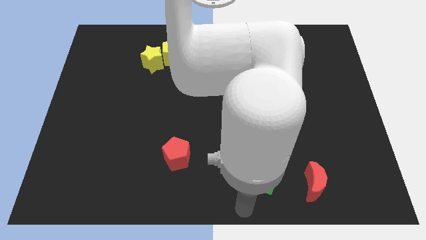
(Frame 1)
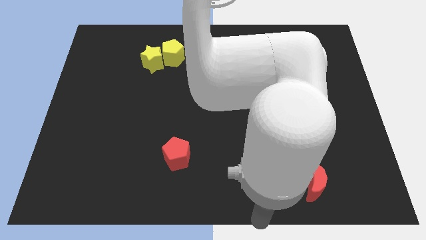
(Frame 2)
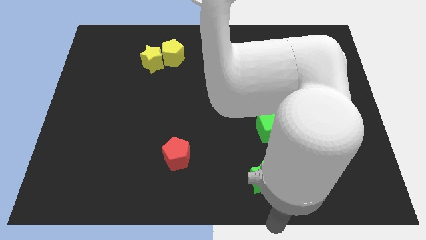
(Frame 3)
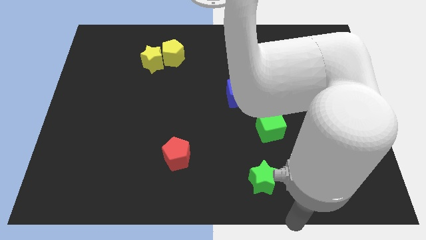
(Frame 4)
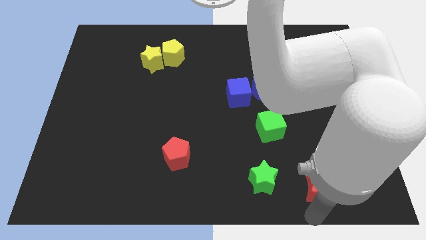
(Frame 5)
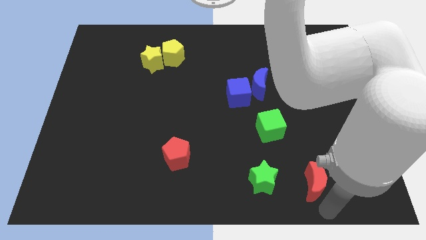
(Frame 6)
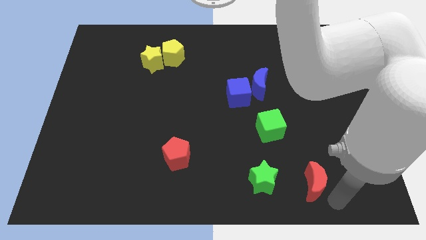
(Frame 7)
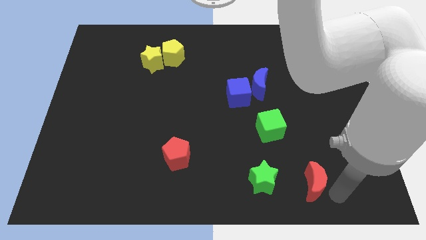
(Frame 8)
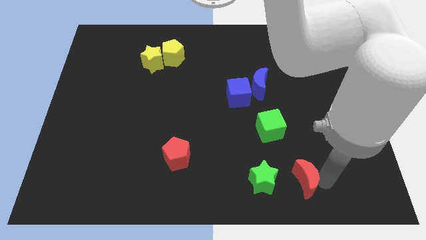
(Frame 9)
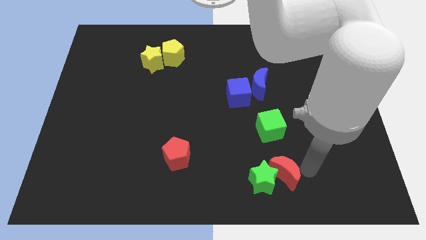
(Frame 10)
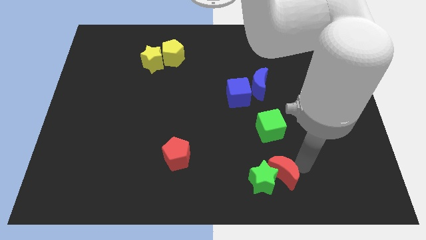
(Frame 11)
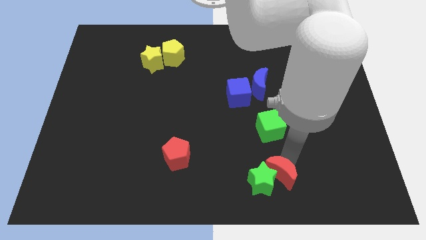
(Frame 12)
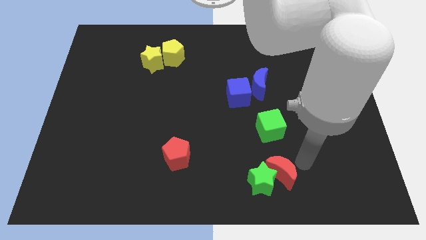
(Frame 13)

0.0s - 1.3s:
push the red crescent into the green star

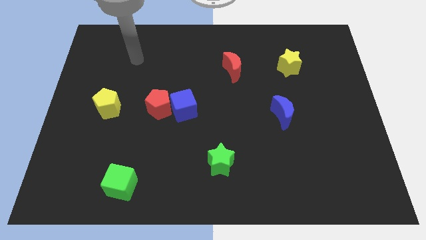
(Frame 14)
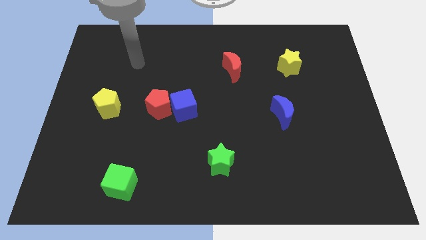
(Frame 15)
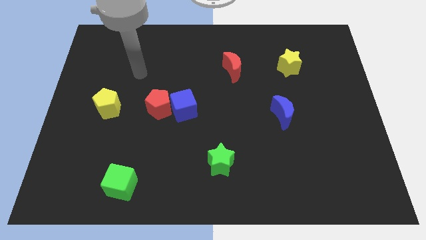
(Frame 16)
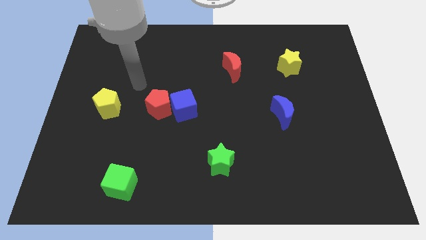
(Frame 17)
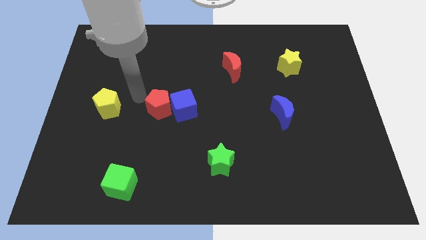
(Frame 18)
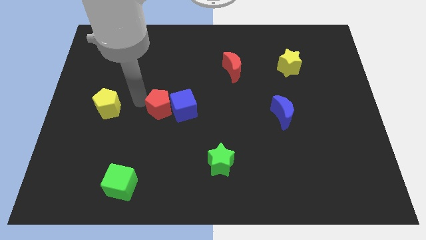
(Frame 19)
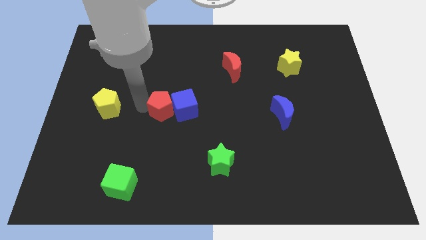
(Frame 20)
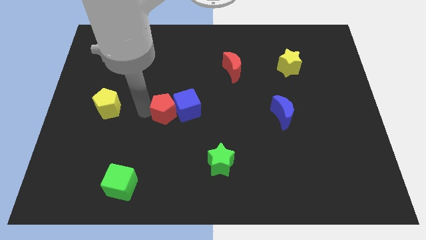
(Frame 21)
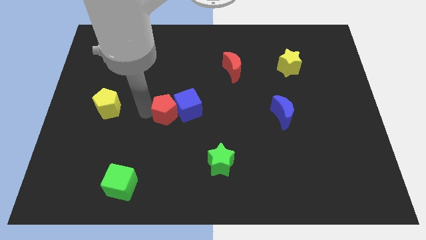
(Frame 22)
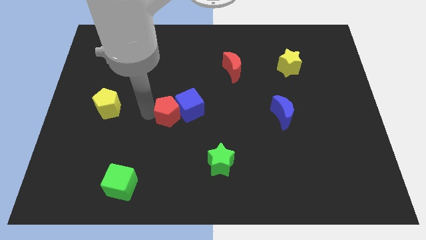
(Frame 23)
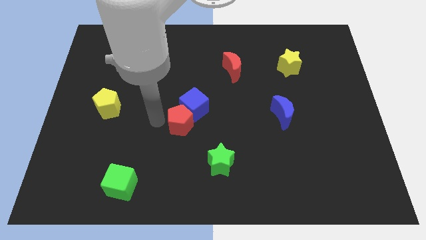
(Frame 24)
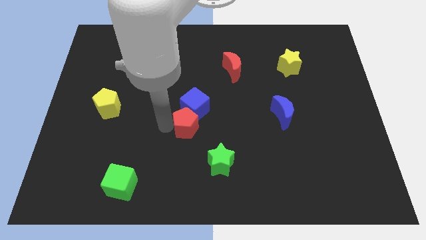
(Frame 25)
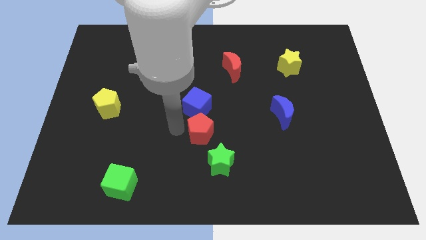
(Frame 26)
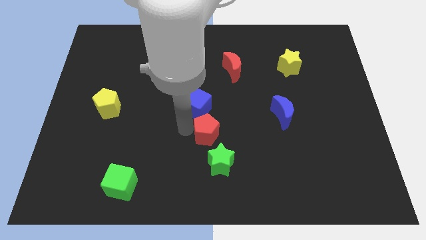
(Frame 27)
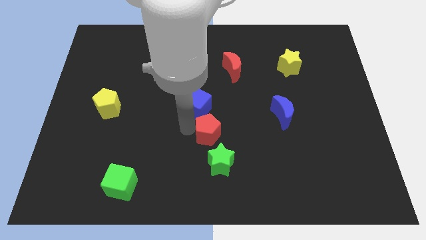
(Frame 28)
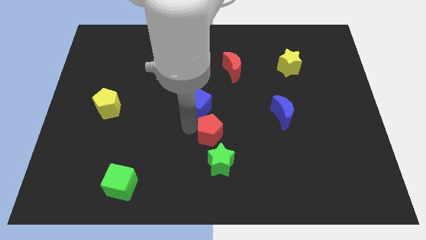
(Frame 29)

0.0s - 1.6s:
place the red pentagon on top left of green star

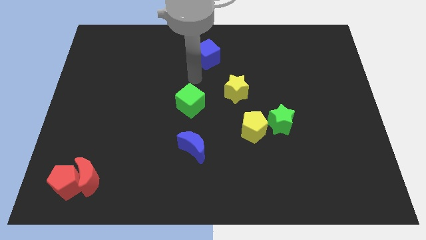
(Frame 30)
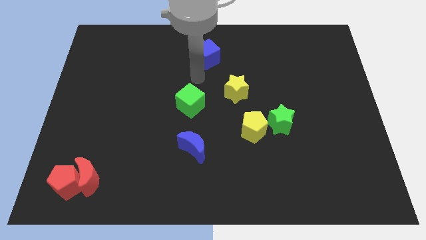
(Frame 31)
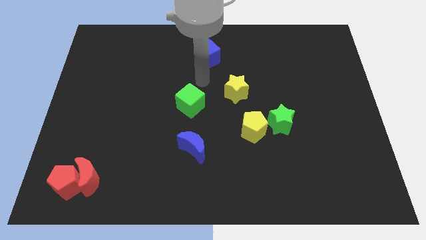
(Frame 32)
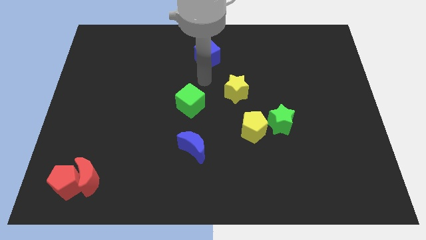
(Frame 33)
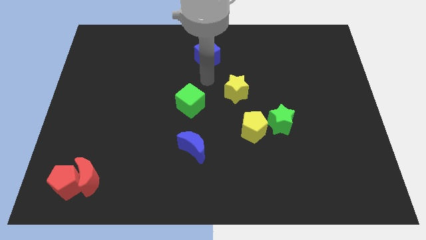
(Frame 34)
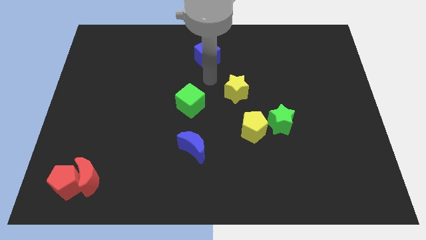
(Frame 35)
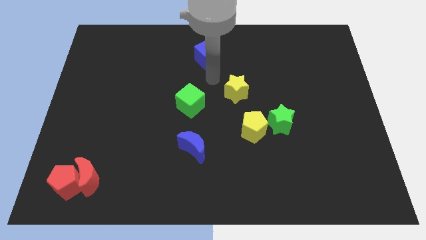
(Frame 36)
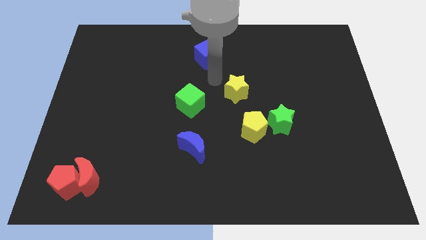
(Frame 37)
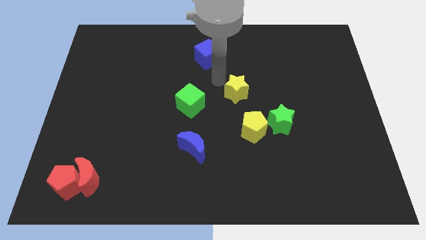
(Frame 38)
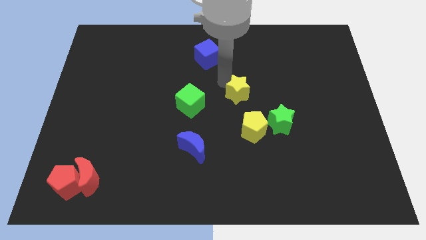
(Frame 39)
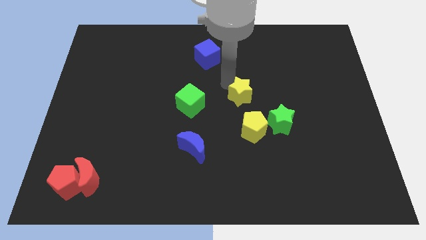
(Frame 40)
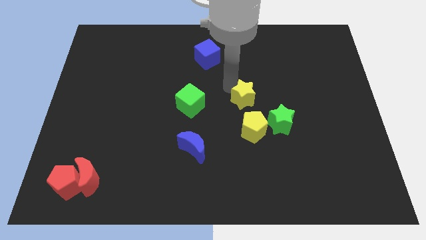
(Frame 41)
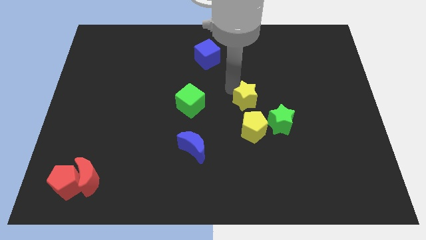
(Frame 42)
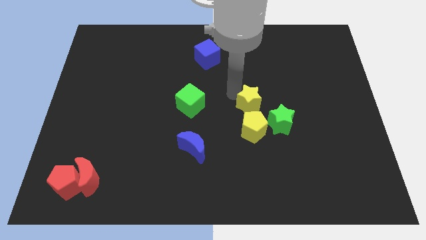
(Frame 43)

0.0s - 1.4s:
move the yellow star to the top of the yellow pentagon

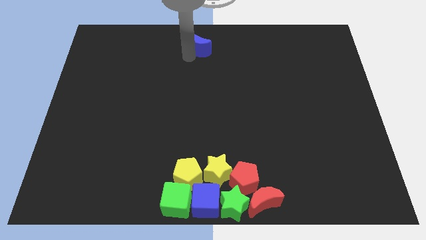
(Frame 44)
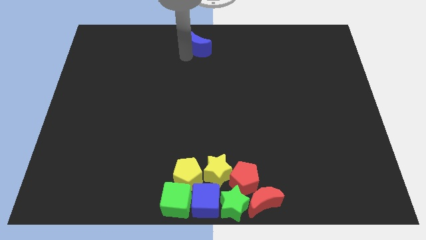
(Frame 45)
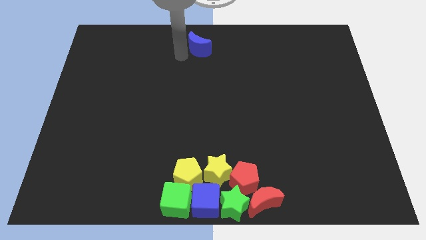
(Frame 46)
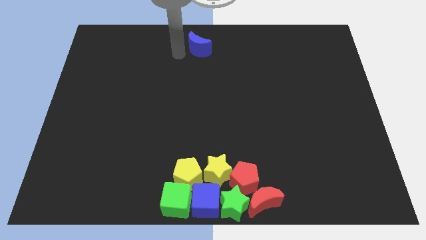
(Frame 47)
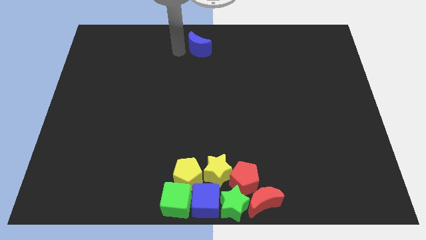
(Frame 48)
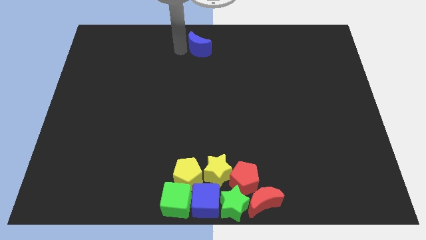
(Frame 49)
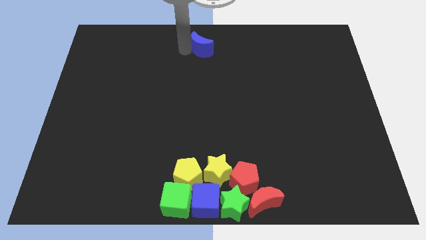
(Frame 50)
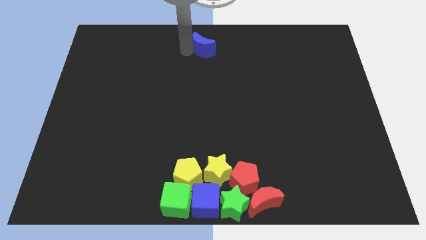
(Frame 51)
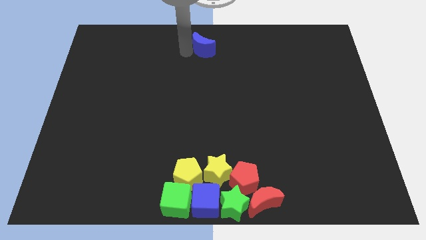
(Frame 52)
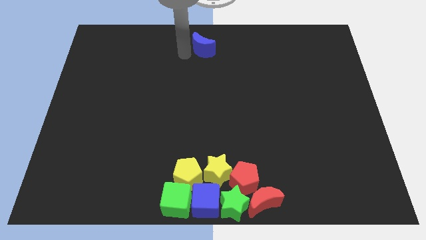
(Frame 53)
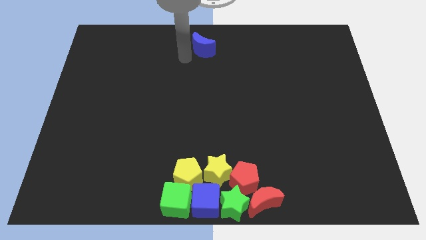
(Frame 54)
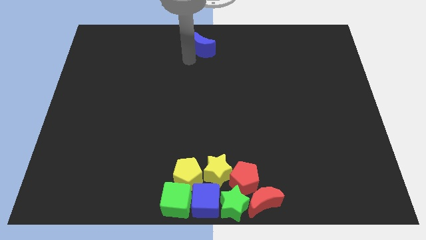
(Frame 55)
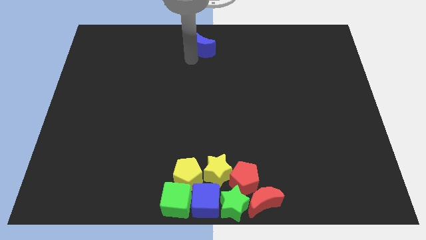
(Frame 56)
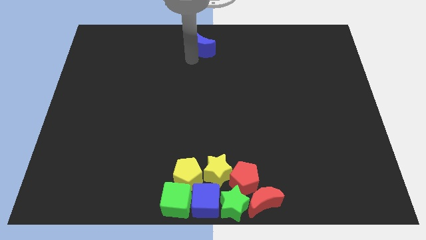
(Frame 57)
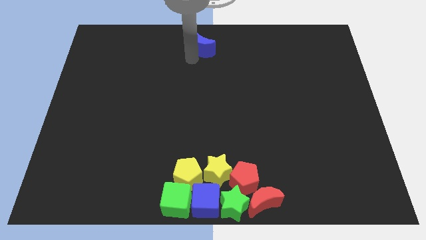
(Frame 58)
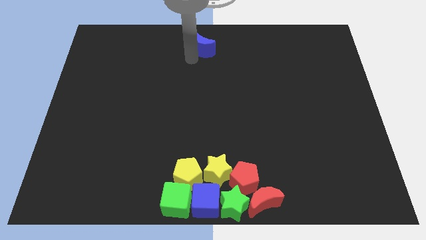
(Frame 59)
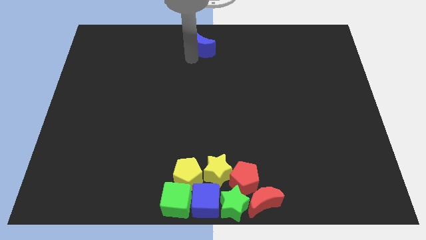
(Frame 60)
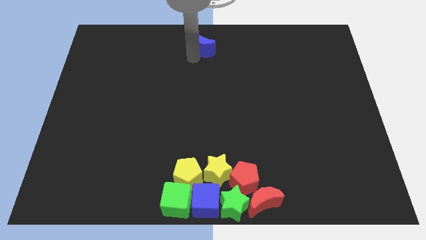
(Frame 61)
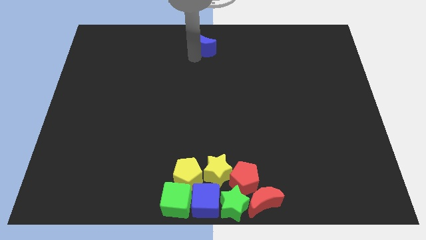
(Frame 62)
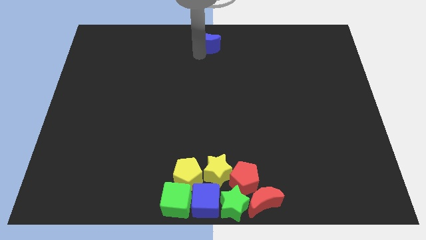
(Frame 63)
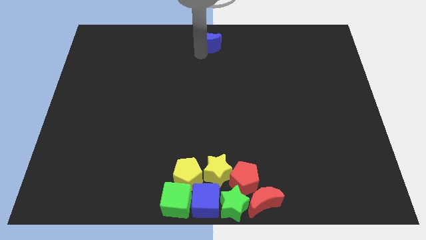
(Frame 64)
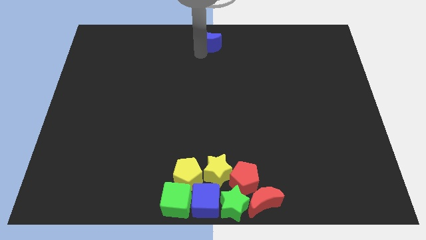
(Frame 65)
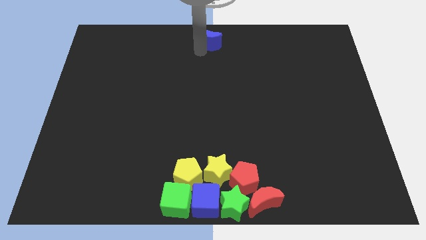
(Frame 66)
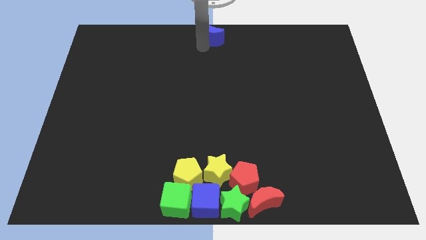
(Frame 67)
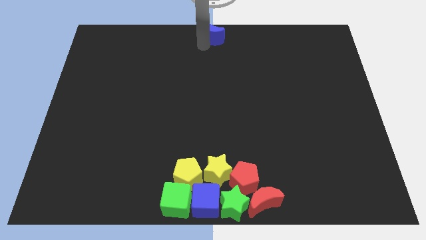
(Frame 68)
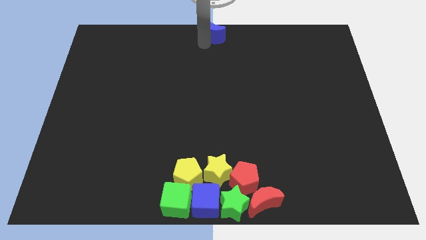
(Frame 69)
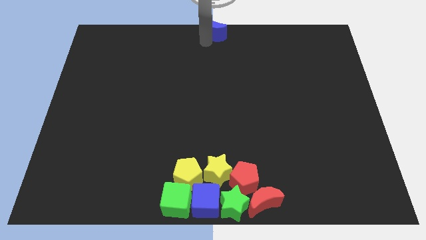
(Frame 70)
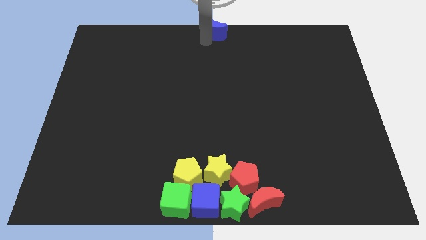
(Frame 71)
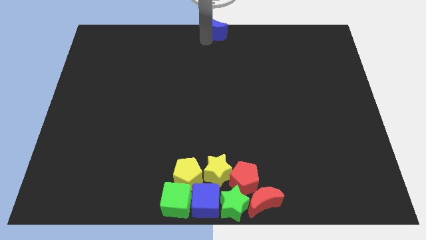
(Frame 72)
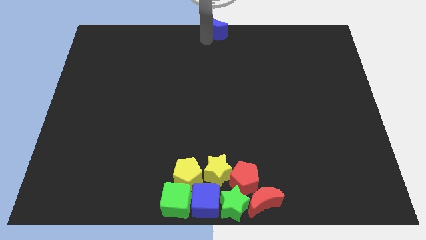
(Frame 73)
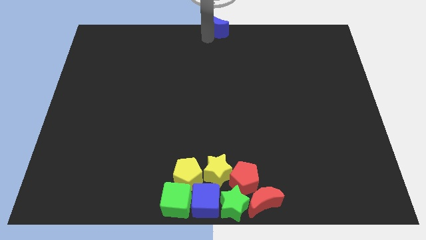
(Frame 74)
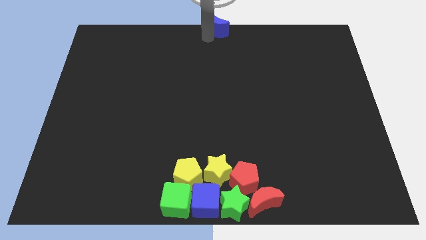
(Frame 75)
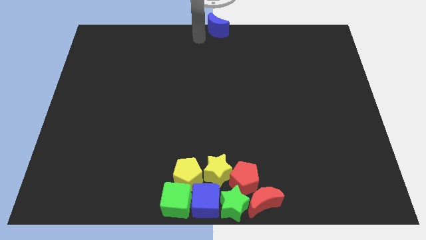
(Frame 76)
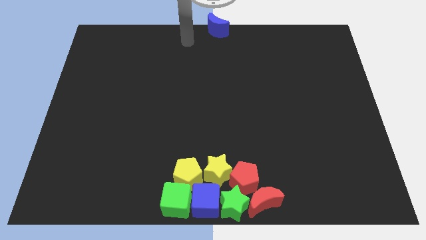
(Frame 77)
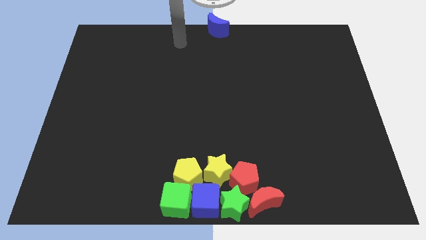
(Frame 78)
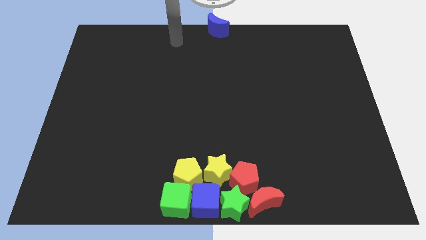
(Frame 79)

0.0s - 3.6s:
place the blue crescent to the top center of the board

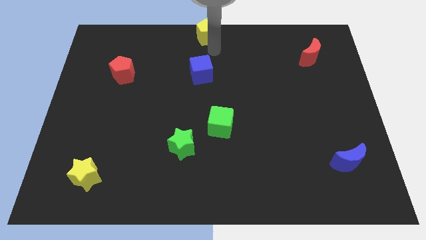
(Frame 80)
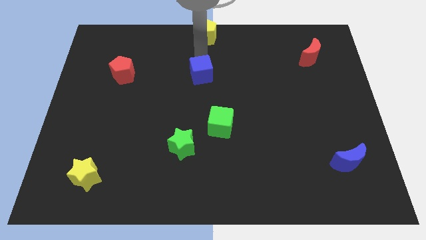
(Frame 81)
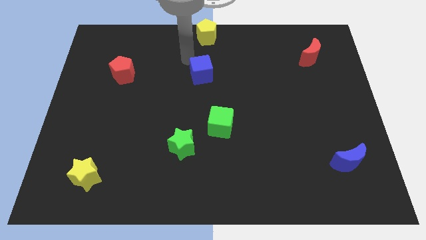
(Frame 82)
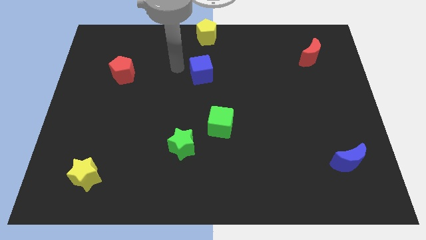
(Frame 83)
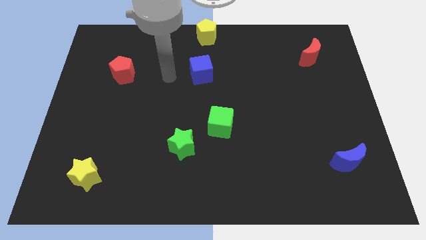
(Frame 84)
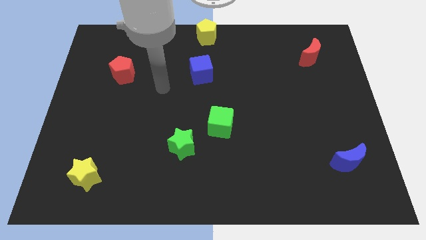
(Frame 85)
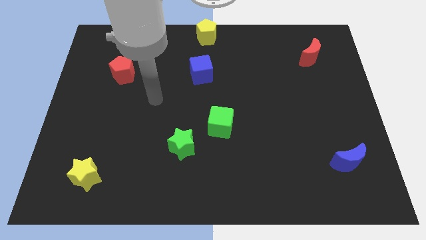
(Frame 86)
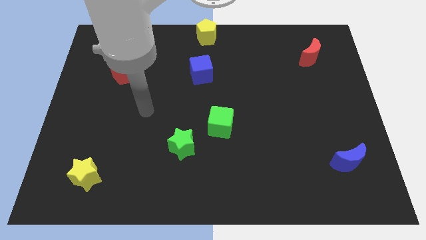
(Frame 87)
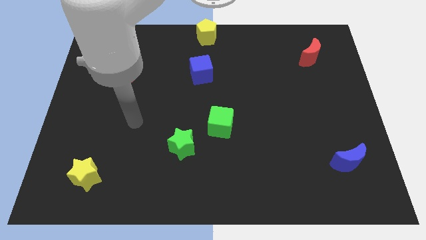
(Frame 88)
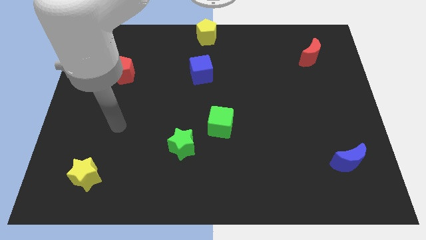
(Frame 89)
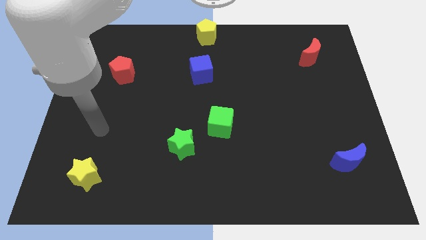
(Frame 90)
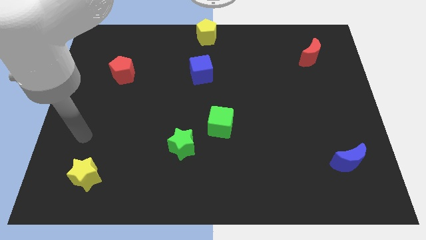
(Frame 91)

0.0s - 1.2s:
place your arm to the top of the yellow star
